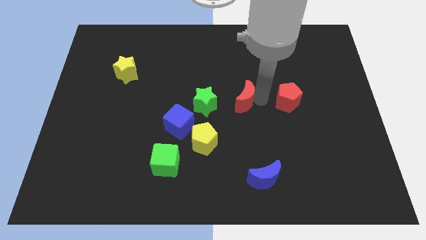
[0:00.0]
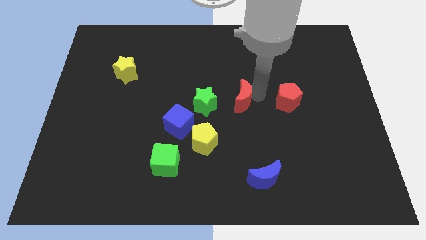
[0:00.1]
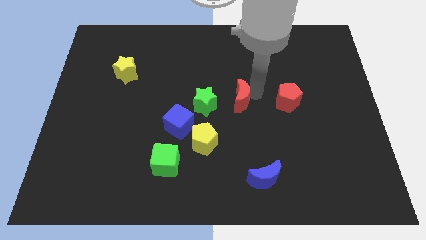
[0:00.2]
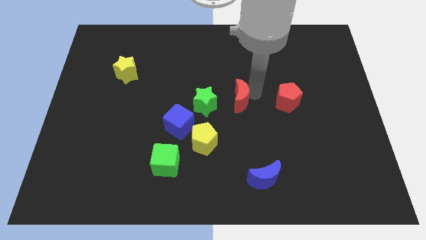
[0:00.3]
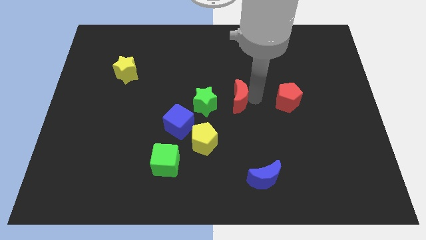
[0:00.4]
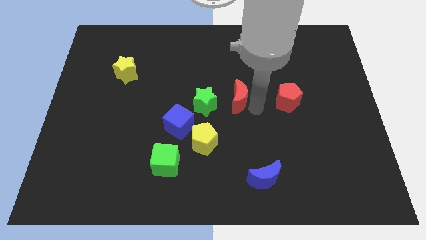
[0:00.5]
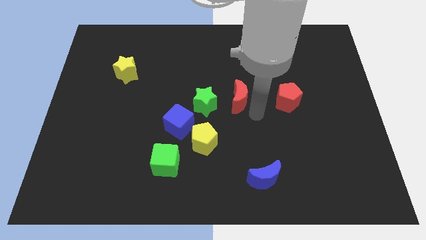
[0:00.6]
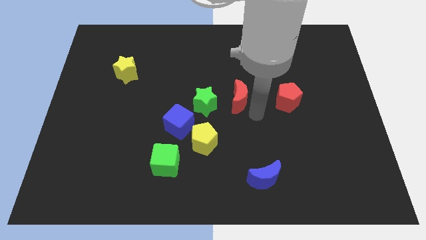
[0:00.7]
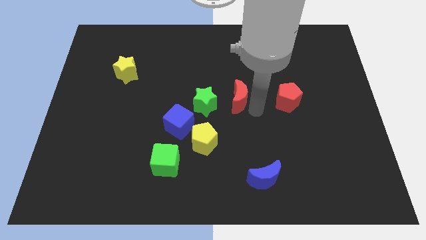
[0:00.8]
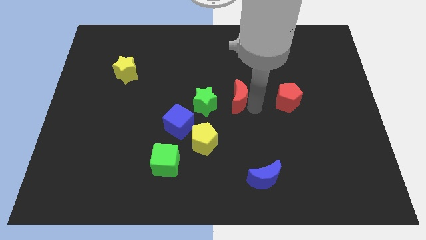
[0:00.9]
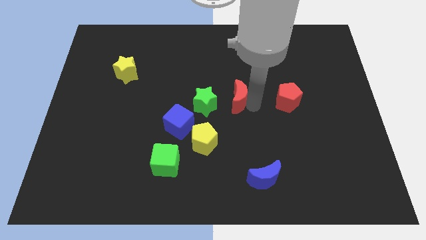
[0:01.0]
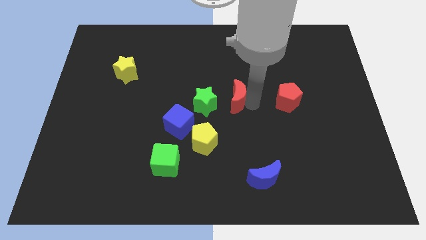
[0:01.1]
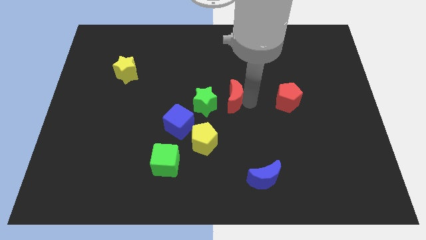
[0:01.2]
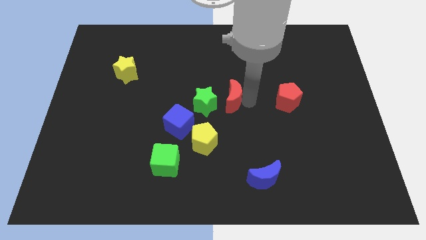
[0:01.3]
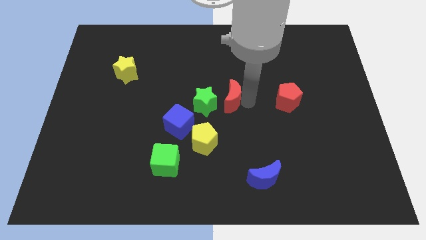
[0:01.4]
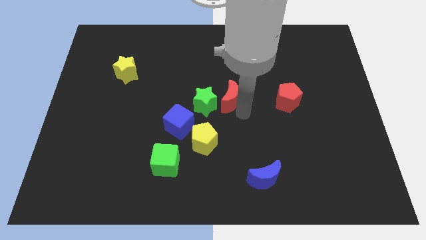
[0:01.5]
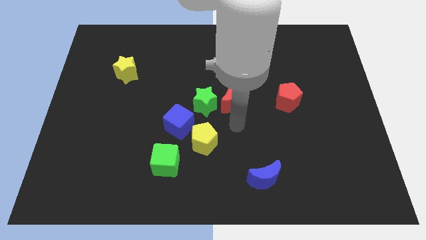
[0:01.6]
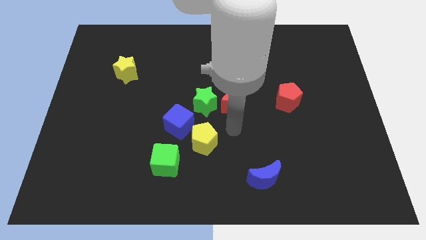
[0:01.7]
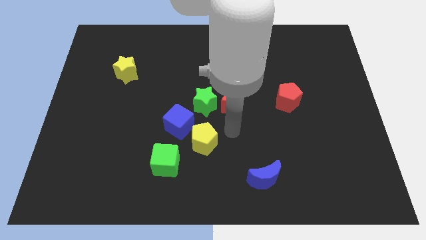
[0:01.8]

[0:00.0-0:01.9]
move red moon close to the green star

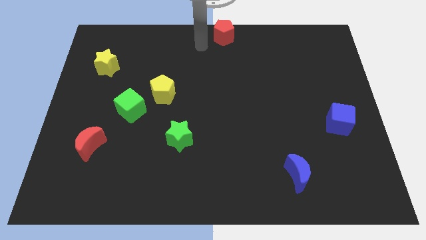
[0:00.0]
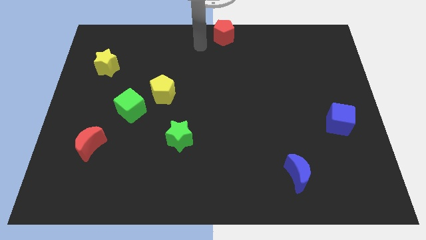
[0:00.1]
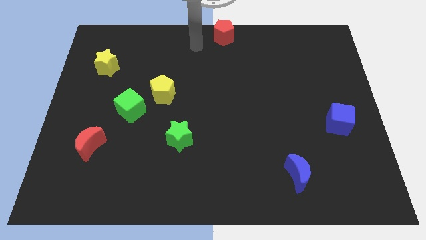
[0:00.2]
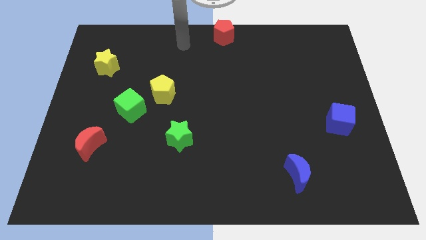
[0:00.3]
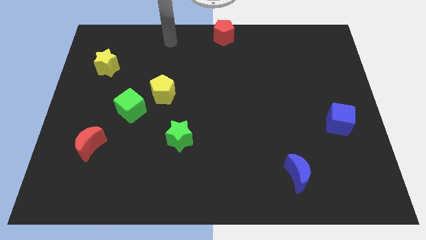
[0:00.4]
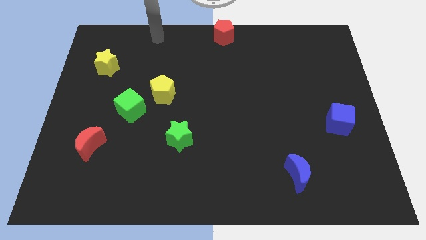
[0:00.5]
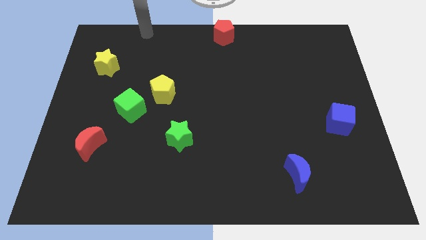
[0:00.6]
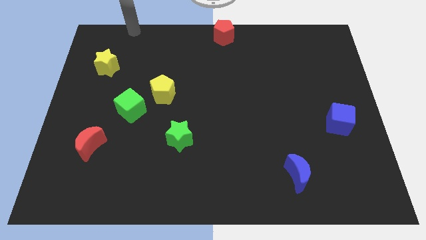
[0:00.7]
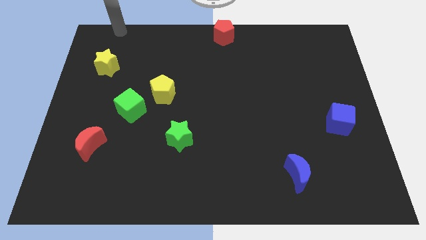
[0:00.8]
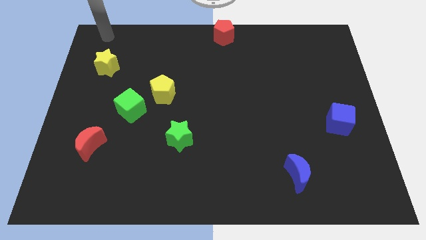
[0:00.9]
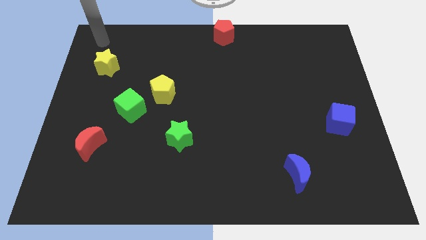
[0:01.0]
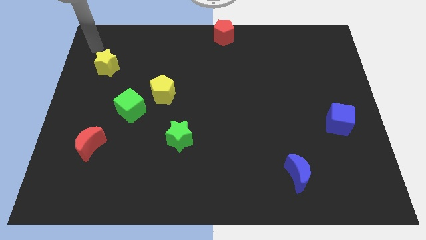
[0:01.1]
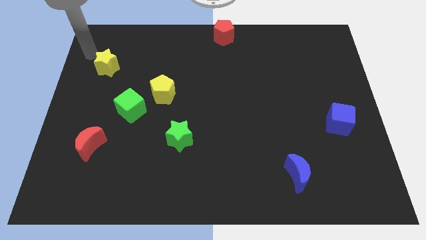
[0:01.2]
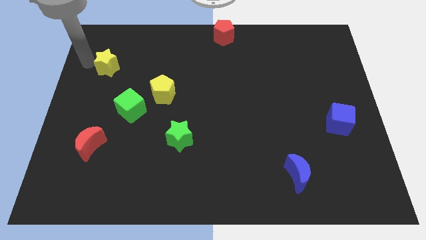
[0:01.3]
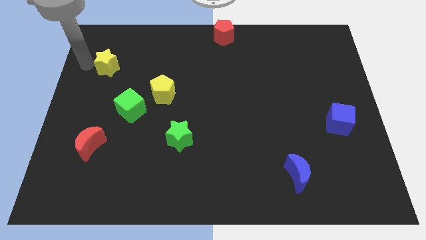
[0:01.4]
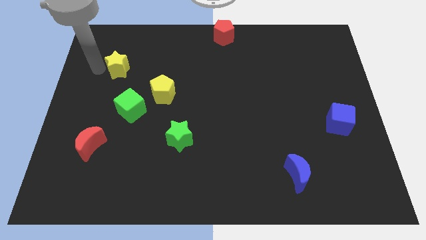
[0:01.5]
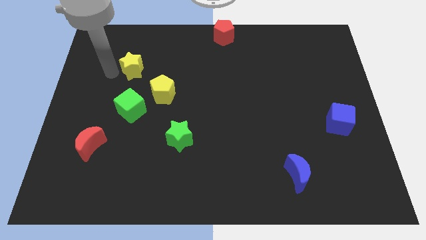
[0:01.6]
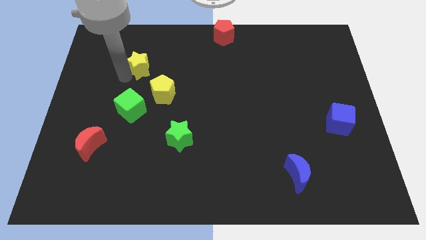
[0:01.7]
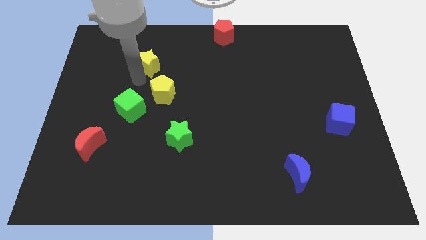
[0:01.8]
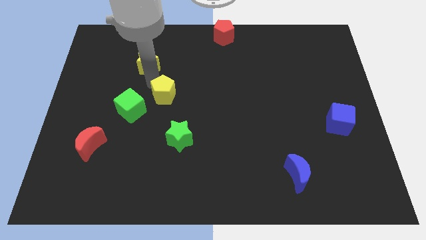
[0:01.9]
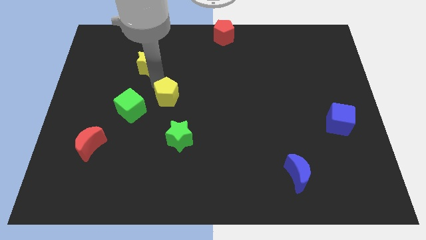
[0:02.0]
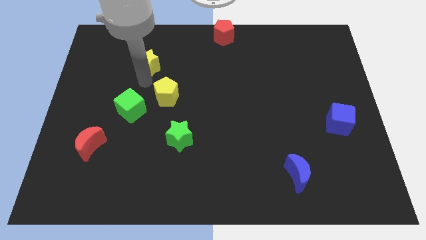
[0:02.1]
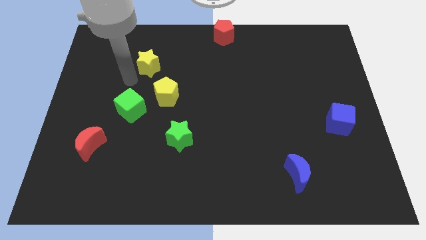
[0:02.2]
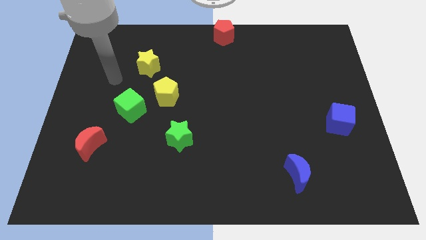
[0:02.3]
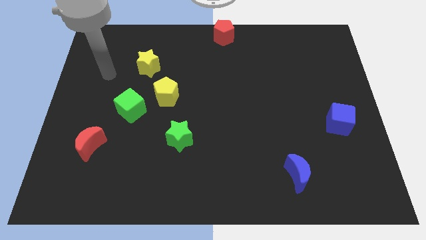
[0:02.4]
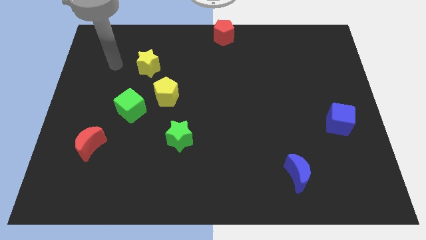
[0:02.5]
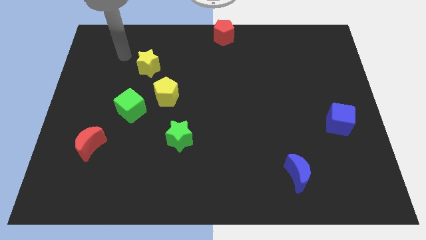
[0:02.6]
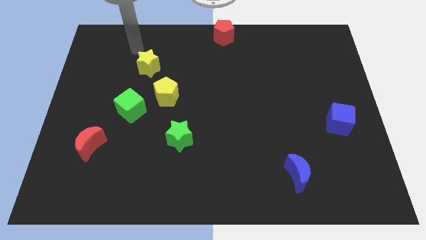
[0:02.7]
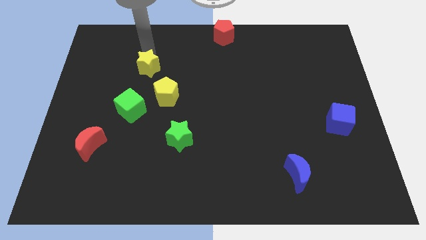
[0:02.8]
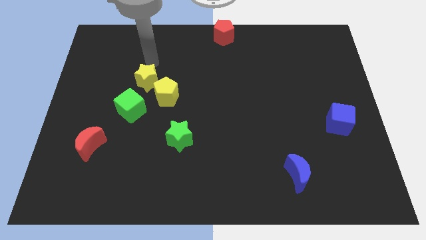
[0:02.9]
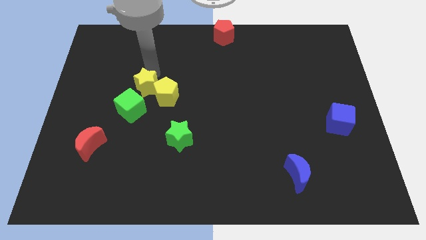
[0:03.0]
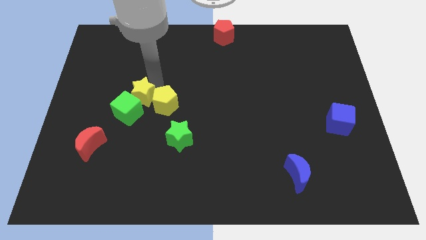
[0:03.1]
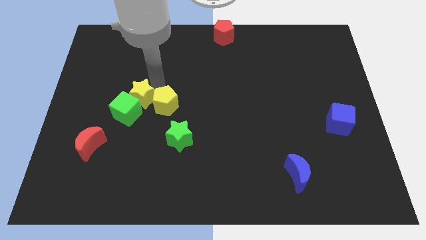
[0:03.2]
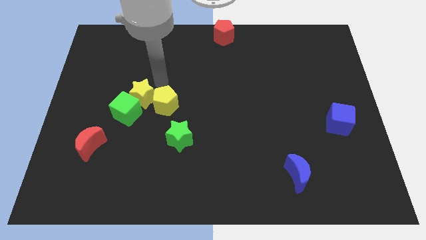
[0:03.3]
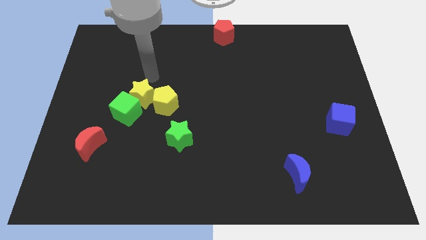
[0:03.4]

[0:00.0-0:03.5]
place the yellow star above the green cube

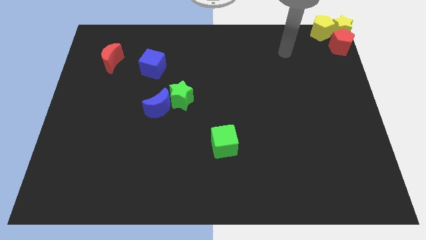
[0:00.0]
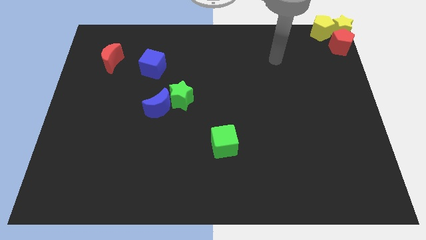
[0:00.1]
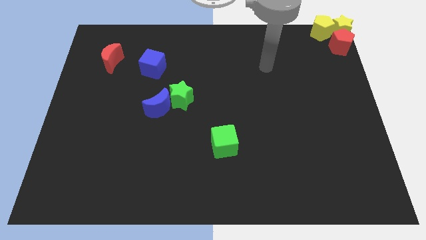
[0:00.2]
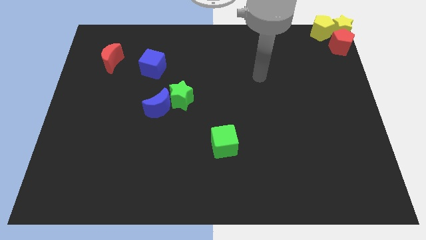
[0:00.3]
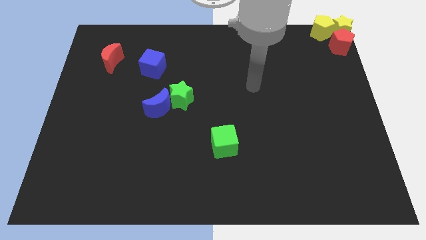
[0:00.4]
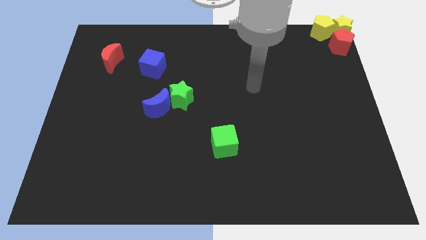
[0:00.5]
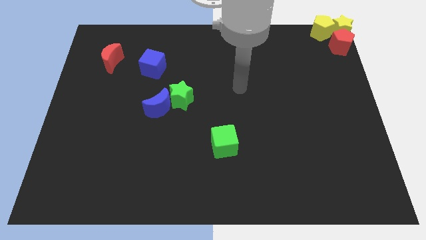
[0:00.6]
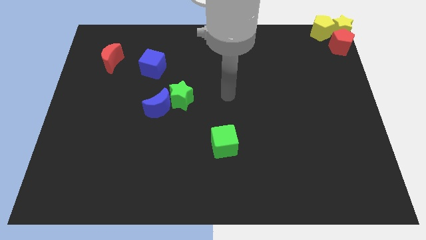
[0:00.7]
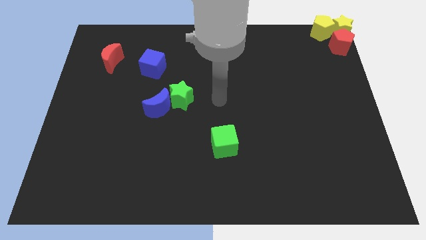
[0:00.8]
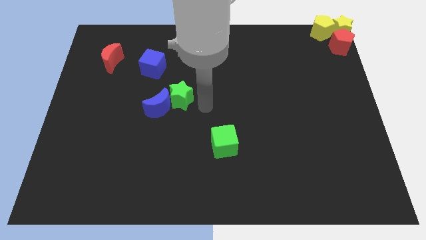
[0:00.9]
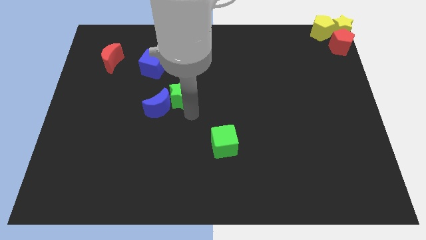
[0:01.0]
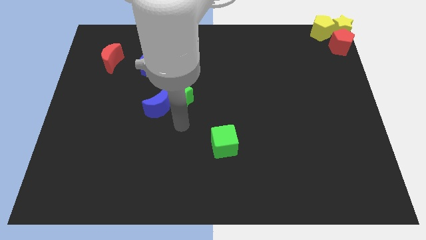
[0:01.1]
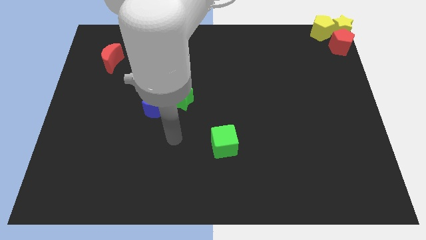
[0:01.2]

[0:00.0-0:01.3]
point your arm at the bottom of the green star

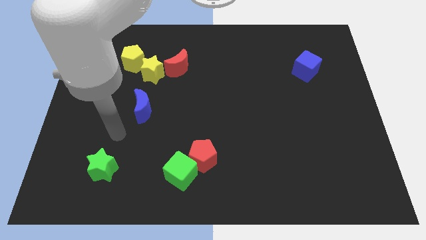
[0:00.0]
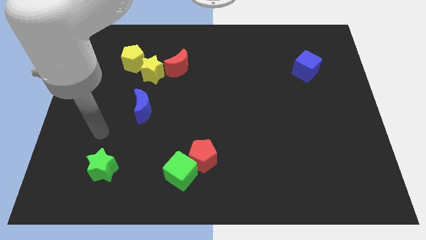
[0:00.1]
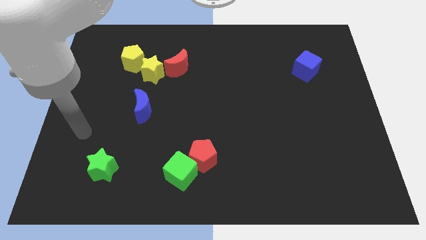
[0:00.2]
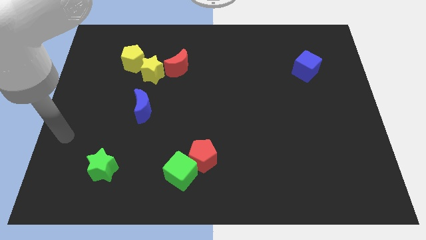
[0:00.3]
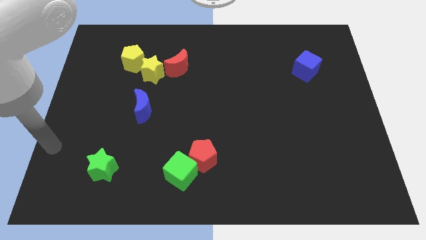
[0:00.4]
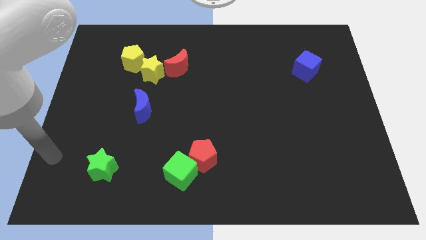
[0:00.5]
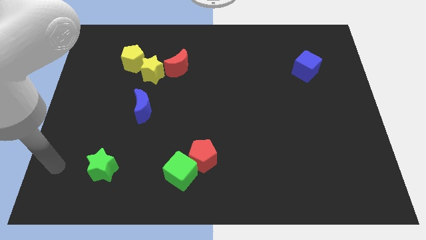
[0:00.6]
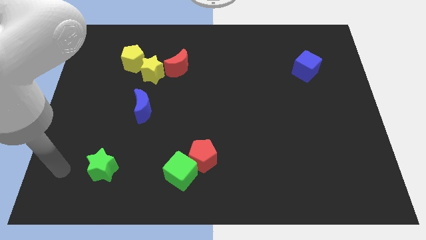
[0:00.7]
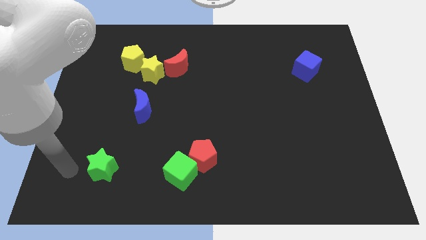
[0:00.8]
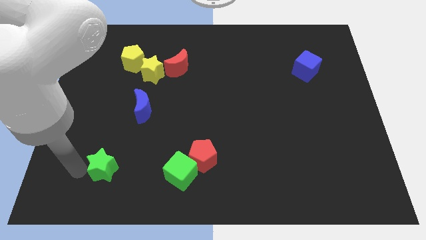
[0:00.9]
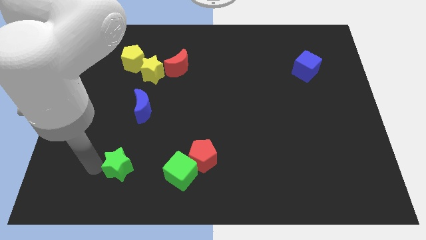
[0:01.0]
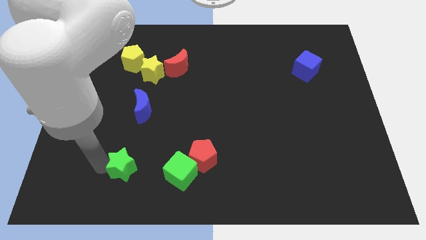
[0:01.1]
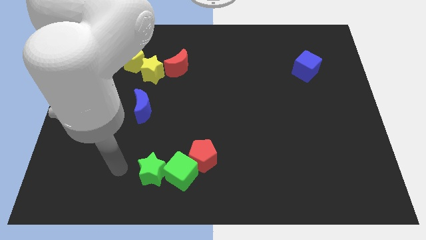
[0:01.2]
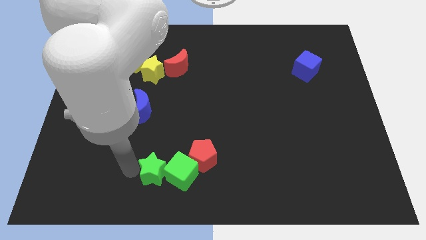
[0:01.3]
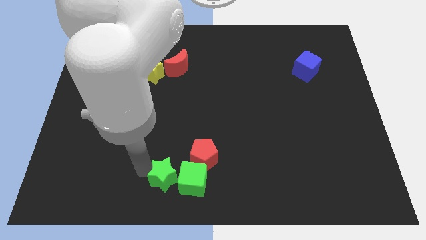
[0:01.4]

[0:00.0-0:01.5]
move the green star into the green cube

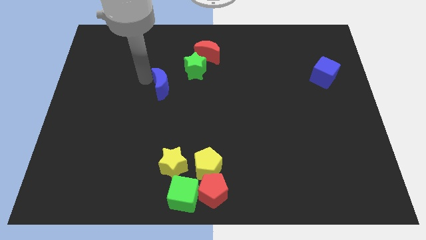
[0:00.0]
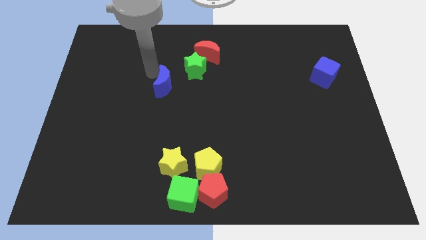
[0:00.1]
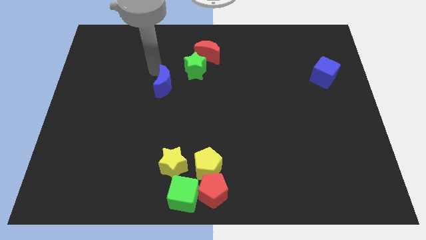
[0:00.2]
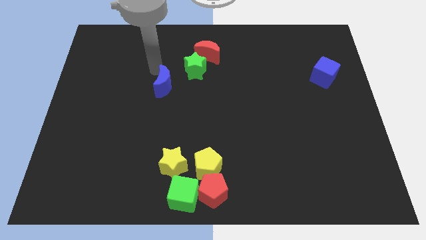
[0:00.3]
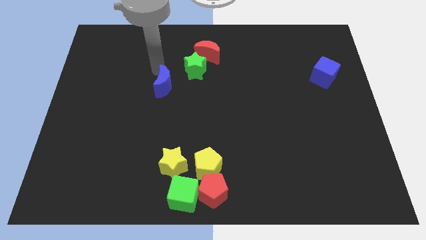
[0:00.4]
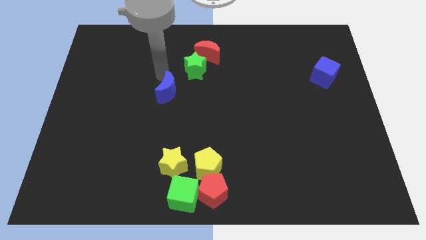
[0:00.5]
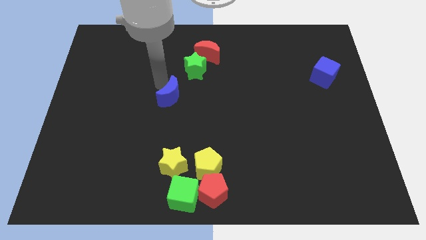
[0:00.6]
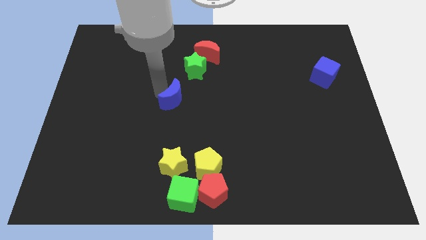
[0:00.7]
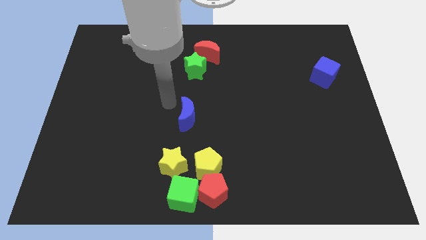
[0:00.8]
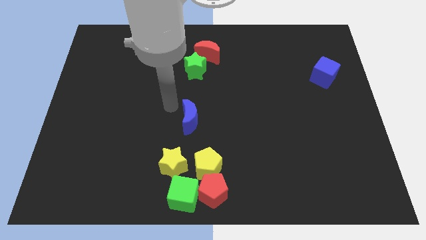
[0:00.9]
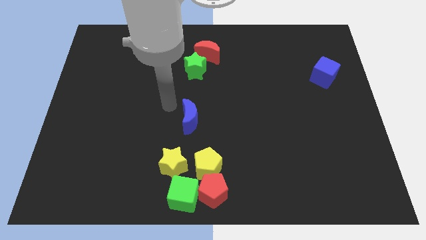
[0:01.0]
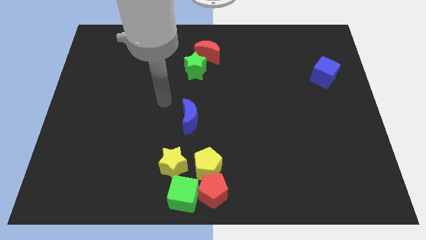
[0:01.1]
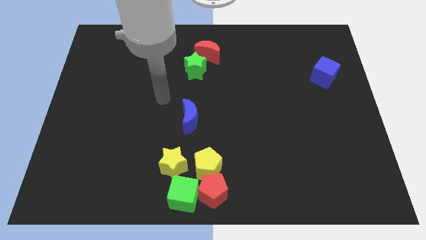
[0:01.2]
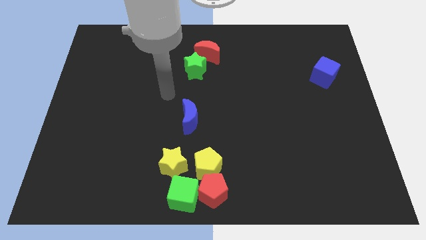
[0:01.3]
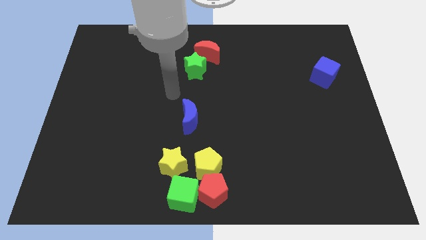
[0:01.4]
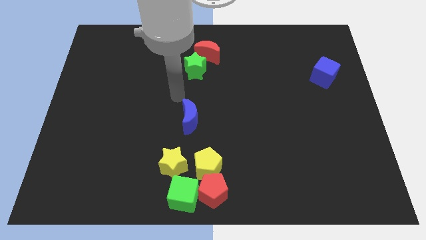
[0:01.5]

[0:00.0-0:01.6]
place the blue moon between the blocks and green star
